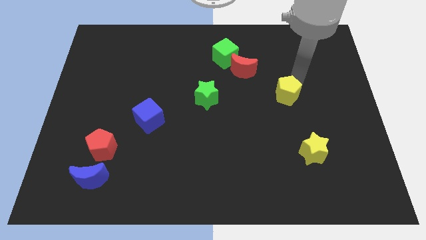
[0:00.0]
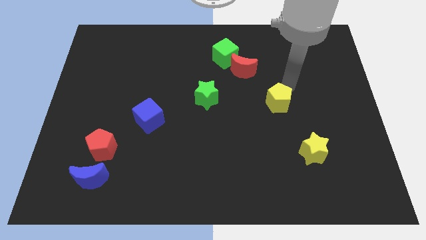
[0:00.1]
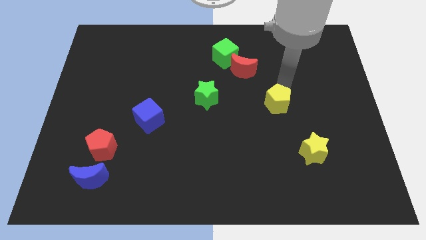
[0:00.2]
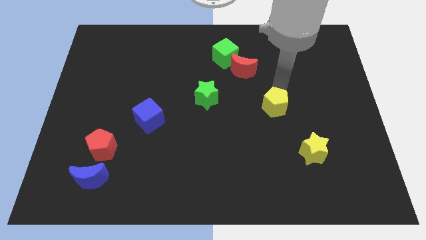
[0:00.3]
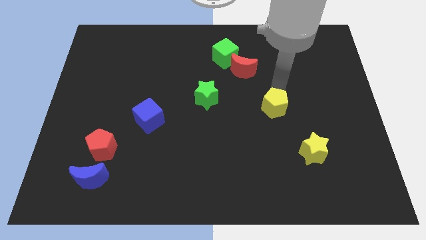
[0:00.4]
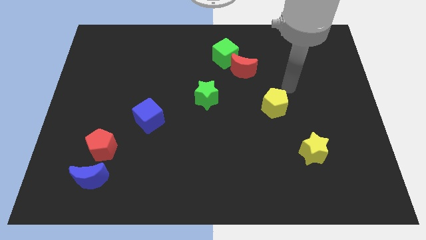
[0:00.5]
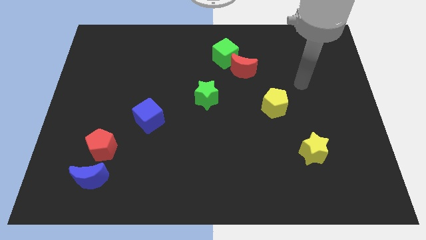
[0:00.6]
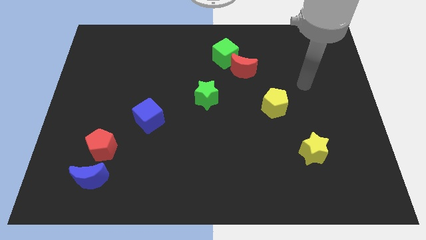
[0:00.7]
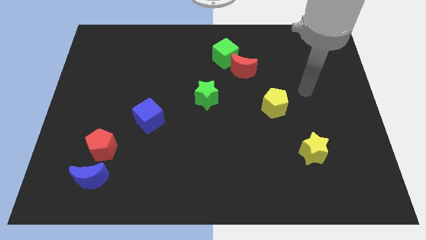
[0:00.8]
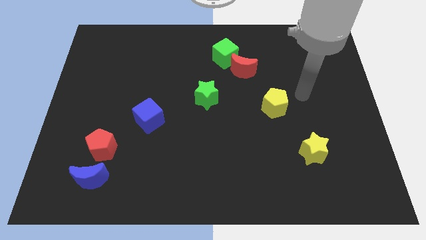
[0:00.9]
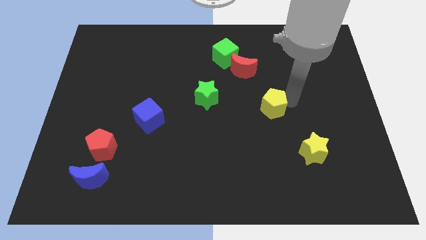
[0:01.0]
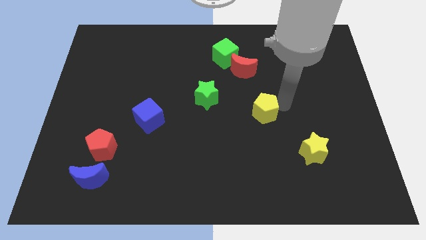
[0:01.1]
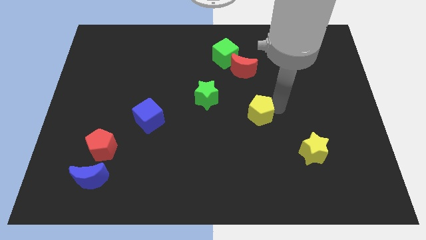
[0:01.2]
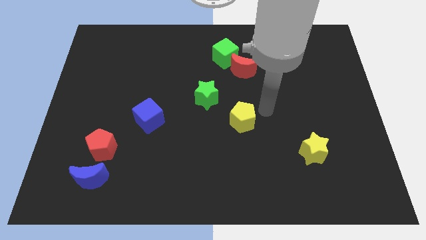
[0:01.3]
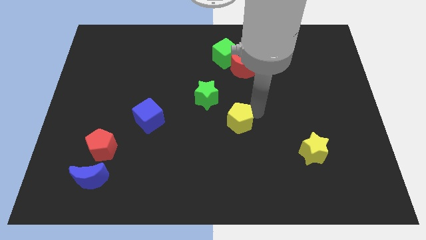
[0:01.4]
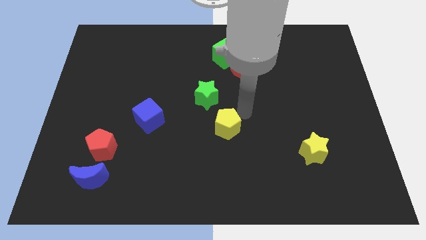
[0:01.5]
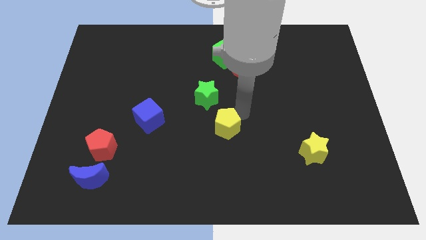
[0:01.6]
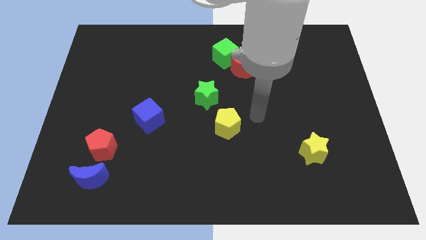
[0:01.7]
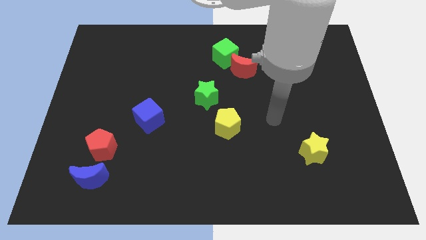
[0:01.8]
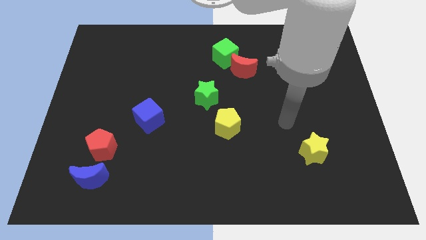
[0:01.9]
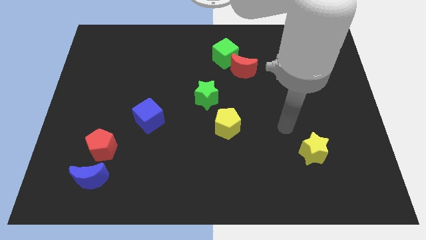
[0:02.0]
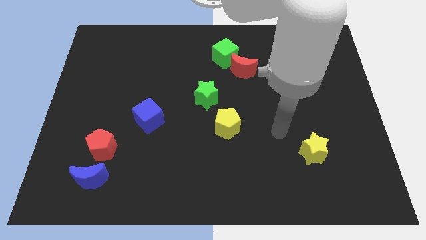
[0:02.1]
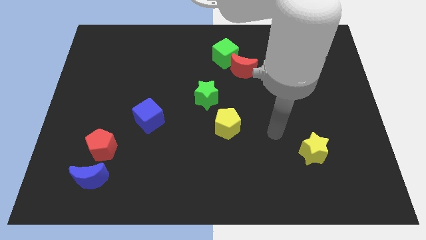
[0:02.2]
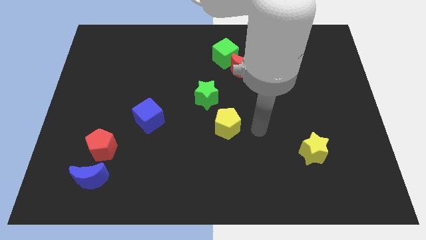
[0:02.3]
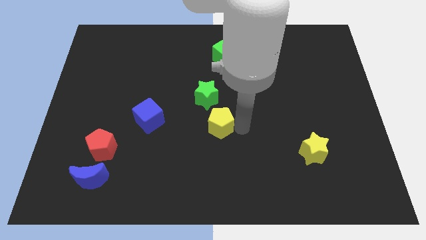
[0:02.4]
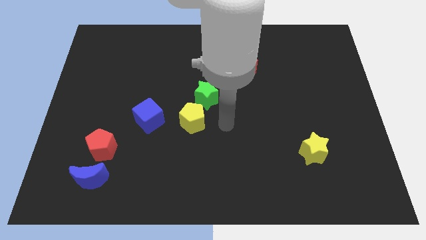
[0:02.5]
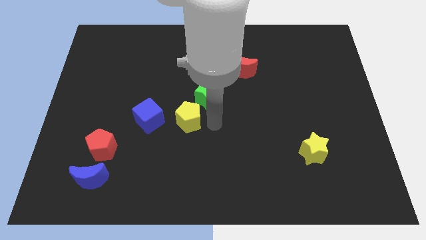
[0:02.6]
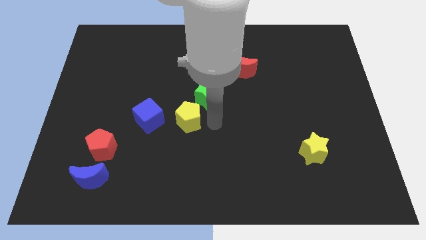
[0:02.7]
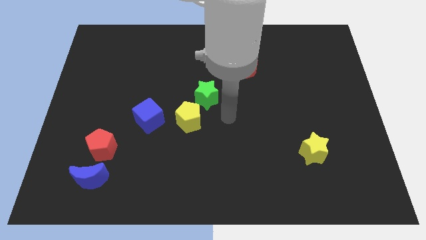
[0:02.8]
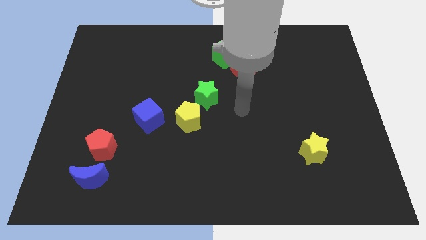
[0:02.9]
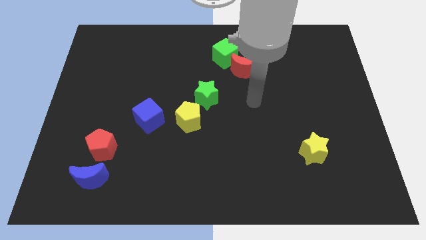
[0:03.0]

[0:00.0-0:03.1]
place the yellow pentagon to the right side of the blue cube

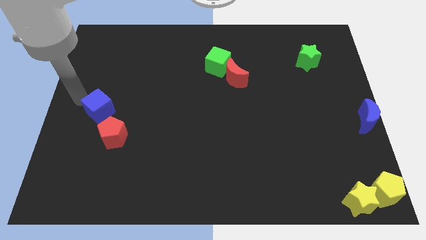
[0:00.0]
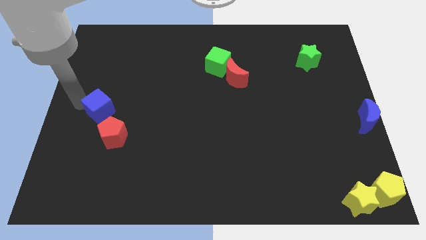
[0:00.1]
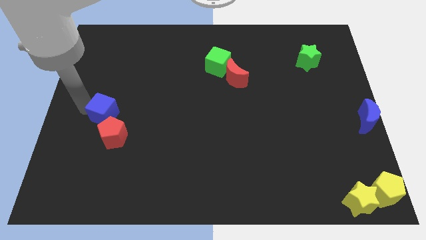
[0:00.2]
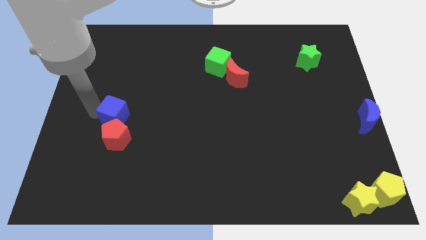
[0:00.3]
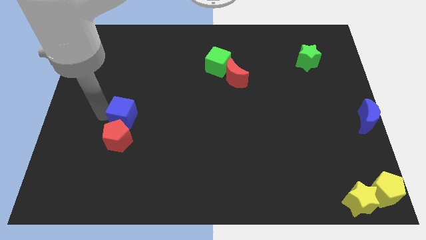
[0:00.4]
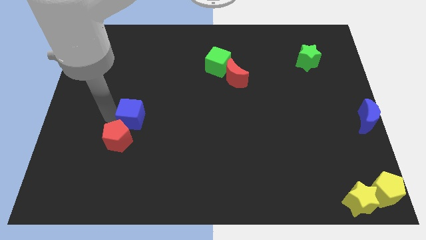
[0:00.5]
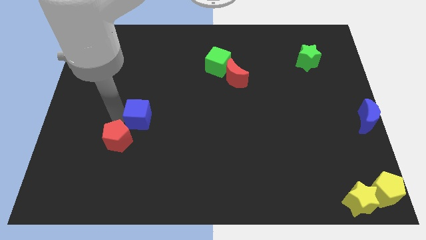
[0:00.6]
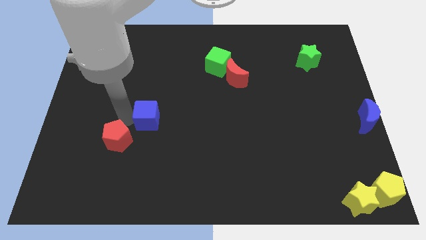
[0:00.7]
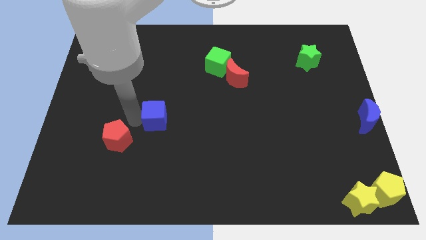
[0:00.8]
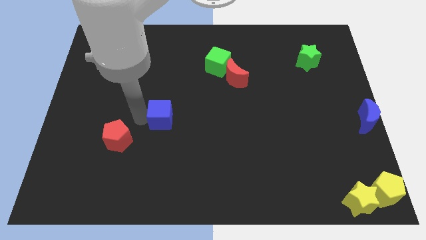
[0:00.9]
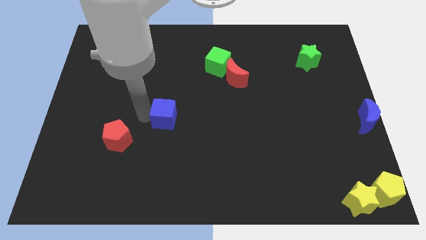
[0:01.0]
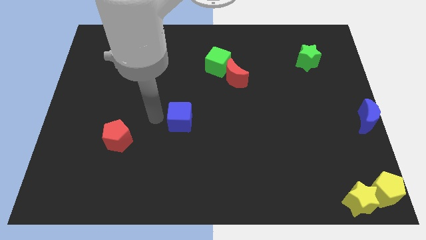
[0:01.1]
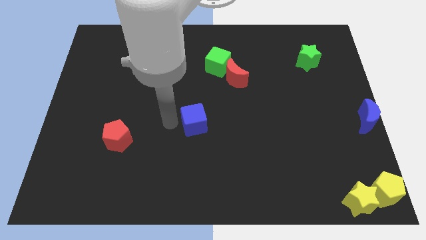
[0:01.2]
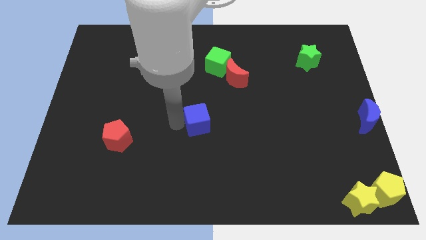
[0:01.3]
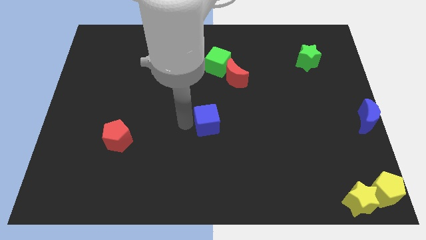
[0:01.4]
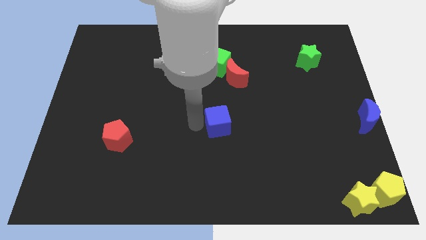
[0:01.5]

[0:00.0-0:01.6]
separate the blue cube from the red pentagon

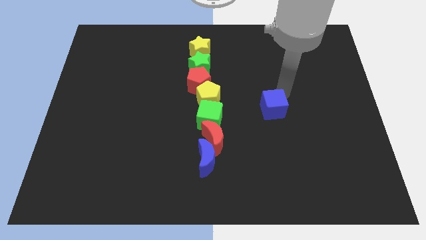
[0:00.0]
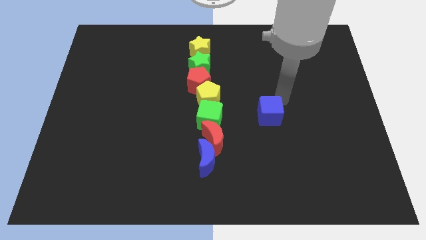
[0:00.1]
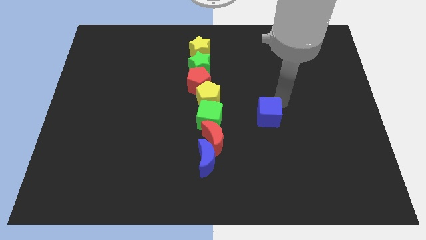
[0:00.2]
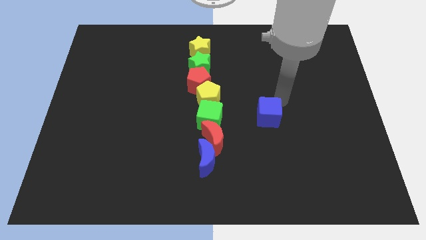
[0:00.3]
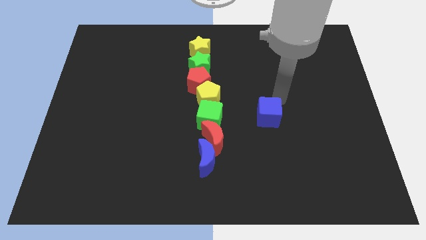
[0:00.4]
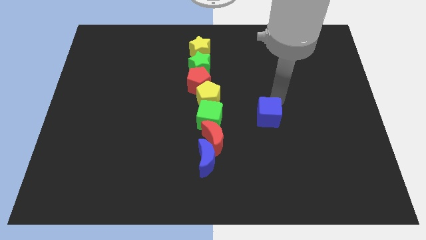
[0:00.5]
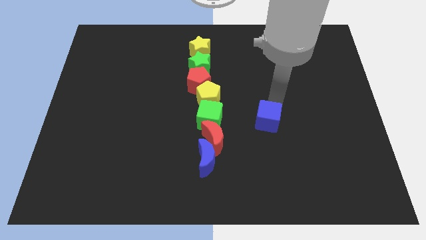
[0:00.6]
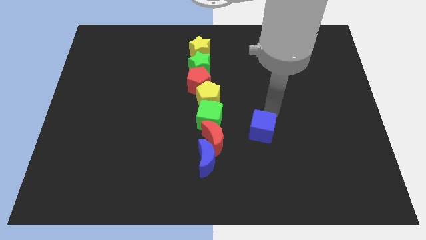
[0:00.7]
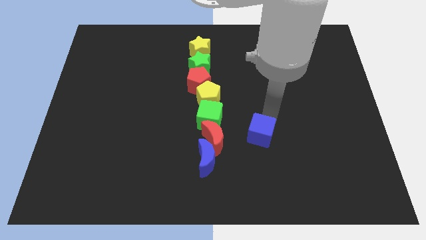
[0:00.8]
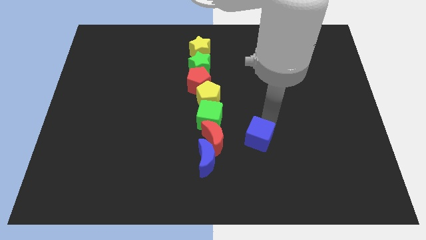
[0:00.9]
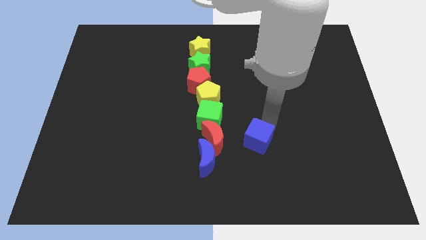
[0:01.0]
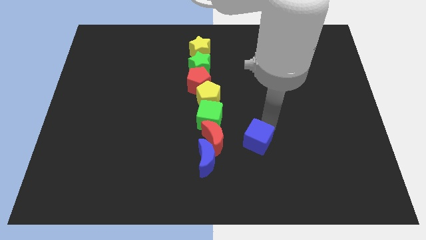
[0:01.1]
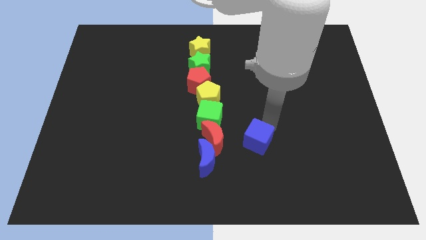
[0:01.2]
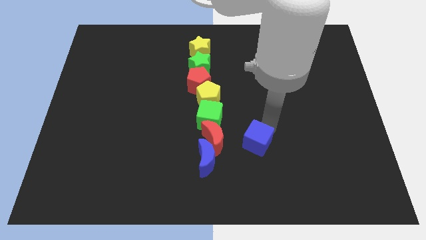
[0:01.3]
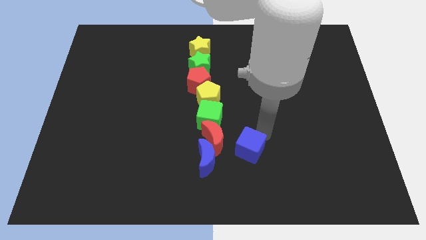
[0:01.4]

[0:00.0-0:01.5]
move the blue cube adjacent to the red crescent

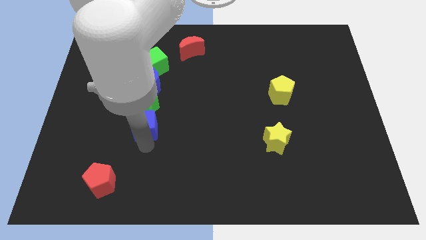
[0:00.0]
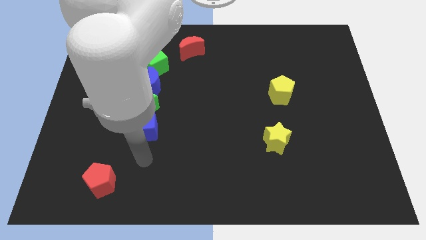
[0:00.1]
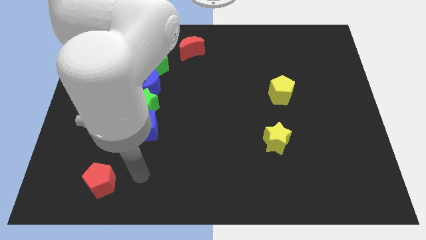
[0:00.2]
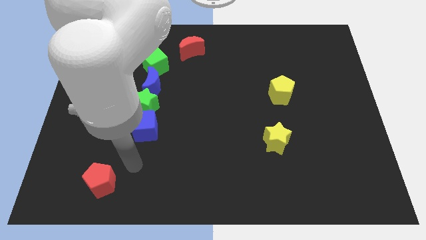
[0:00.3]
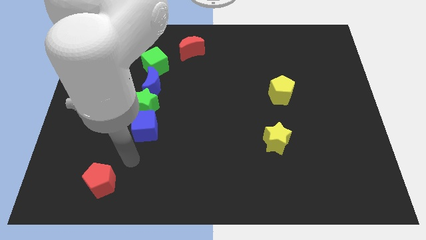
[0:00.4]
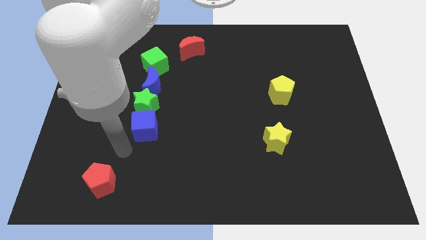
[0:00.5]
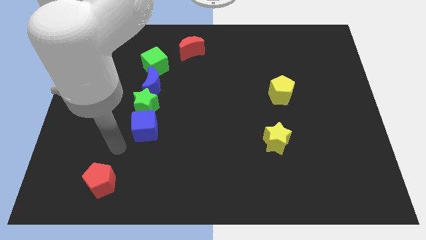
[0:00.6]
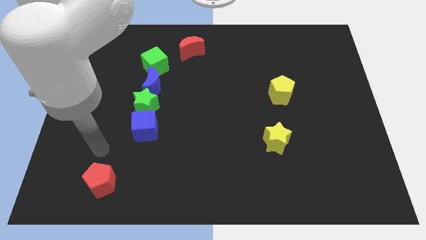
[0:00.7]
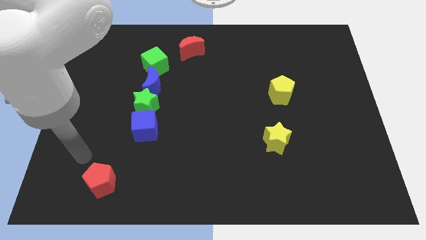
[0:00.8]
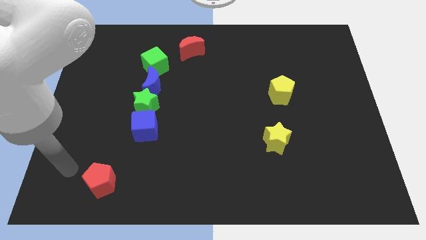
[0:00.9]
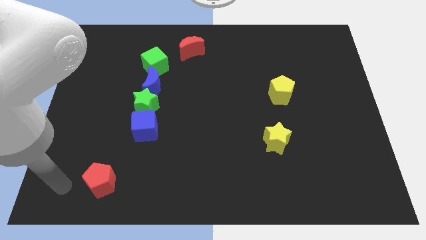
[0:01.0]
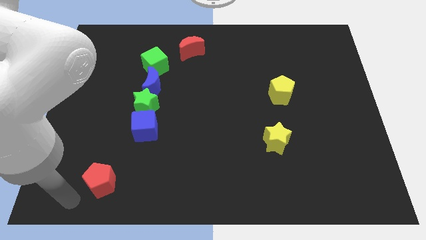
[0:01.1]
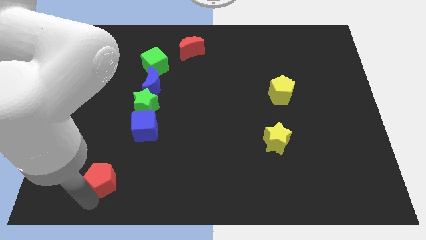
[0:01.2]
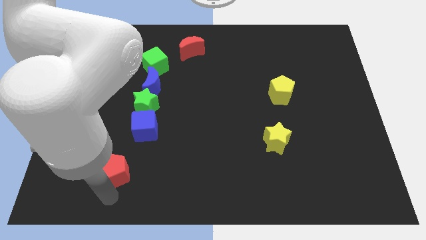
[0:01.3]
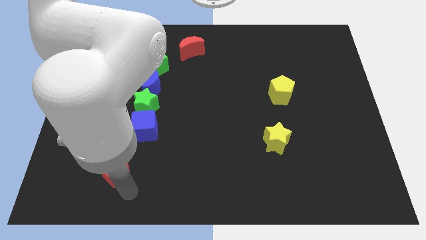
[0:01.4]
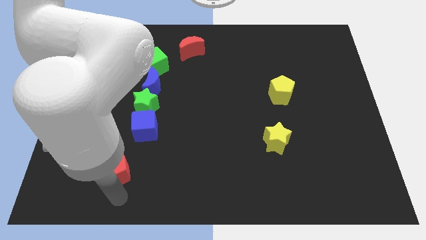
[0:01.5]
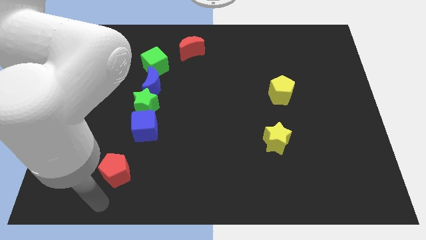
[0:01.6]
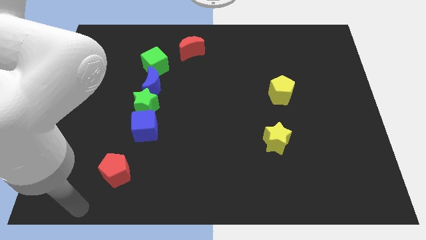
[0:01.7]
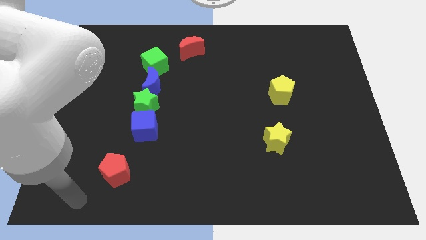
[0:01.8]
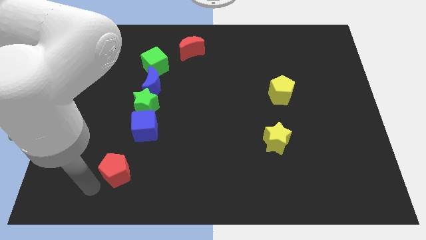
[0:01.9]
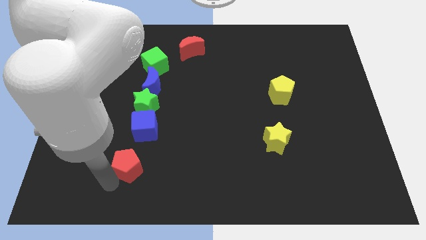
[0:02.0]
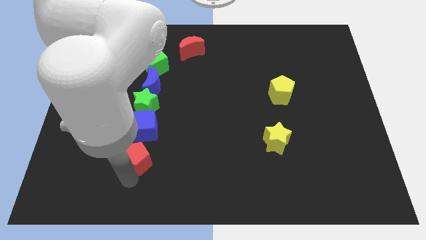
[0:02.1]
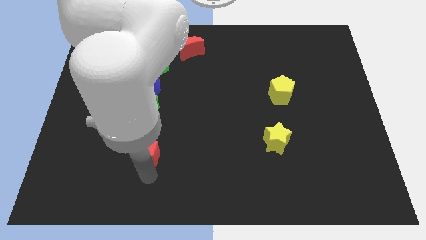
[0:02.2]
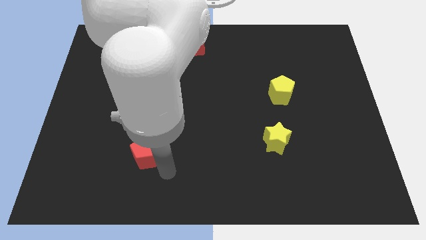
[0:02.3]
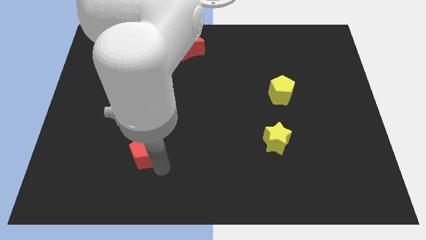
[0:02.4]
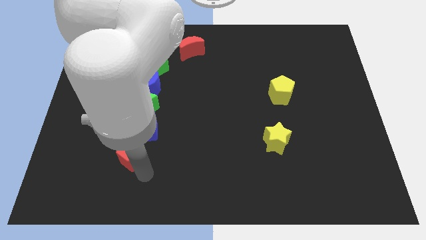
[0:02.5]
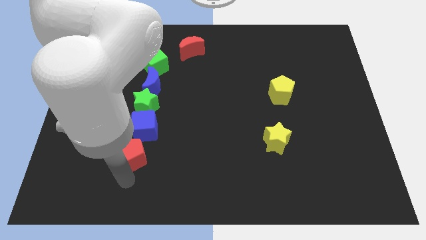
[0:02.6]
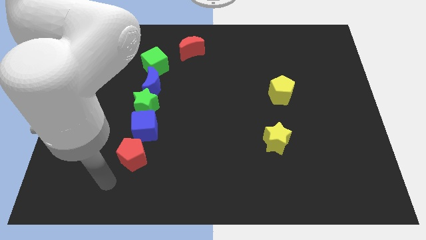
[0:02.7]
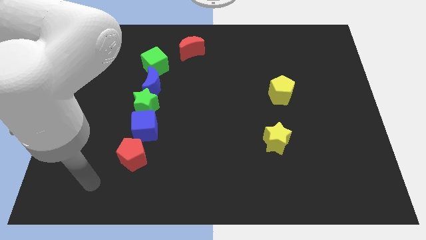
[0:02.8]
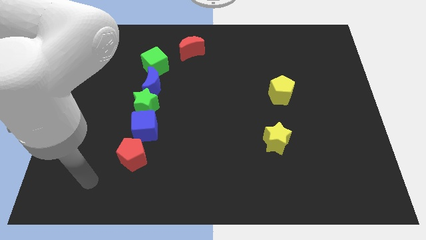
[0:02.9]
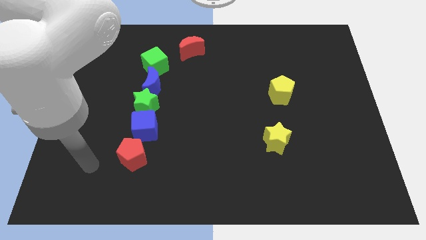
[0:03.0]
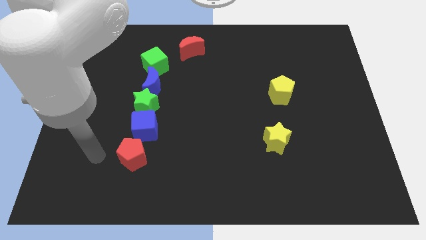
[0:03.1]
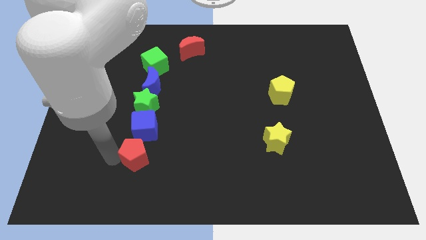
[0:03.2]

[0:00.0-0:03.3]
move red pentagon below blue cube
